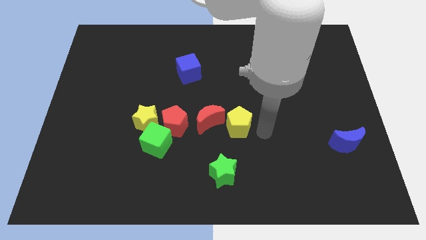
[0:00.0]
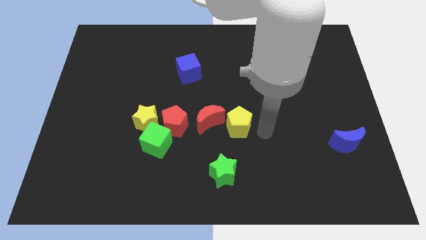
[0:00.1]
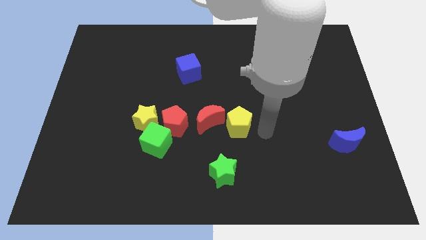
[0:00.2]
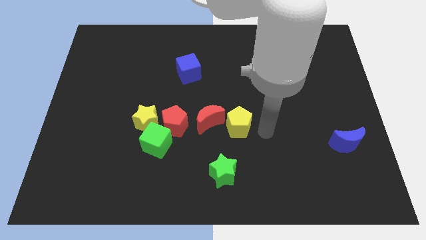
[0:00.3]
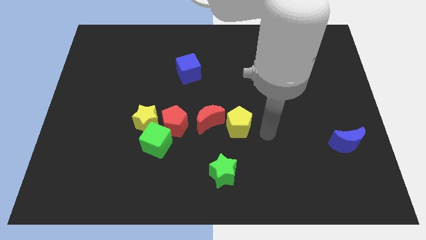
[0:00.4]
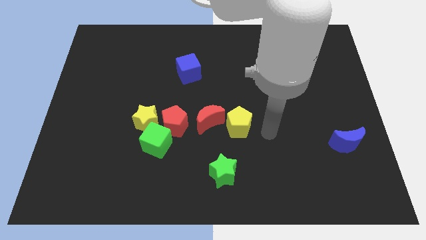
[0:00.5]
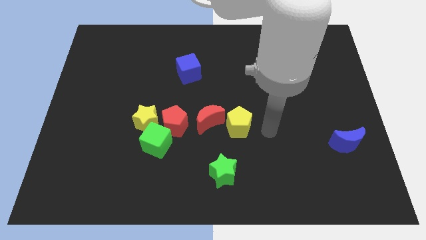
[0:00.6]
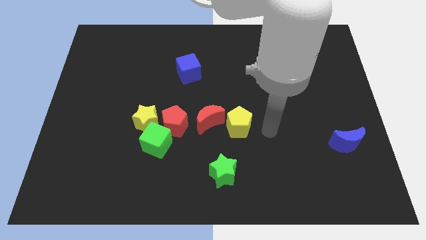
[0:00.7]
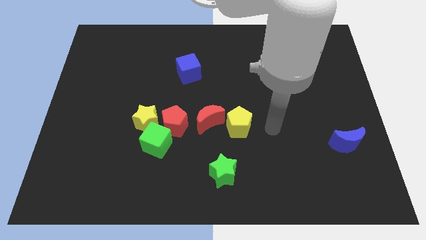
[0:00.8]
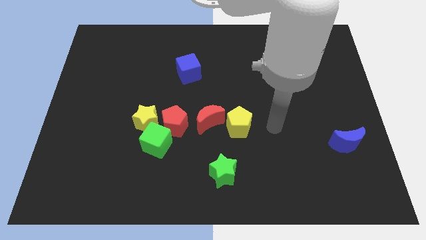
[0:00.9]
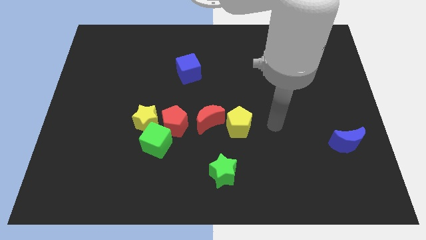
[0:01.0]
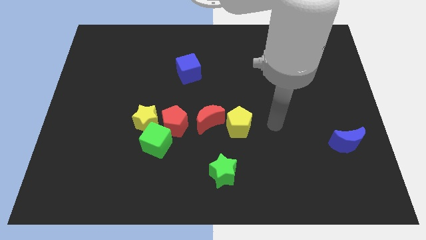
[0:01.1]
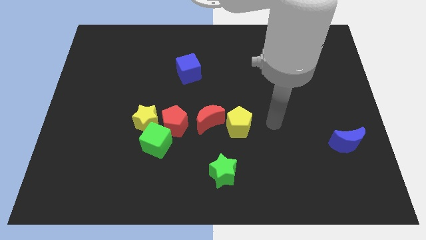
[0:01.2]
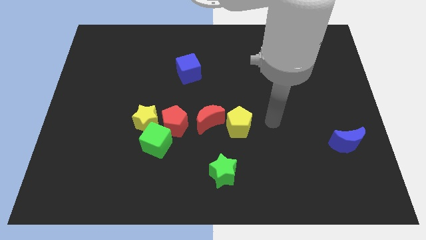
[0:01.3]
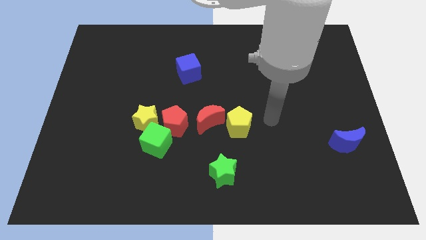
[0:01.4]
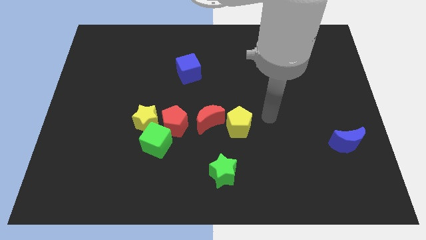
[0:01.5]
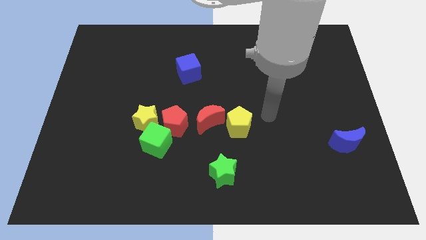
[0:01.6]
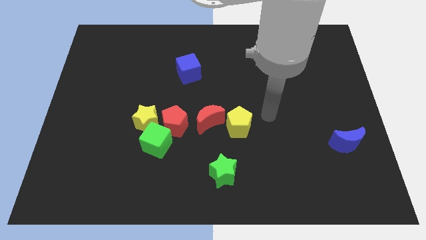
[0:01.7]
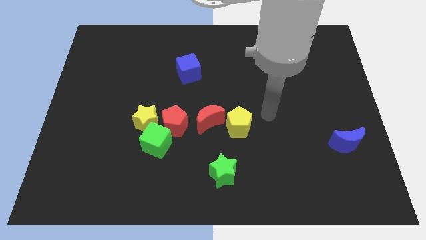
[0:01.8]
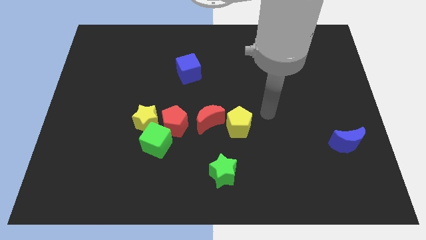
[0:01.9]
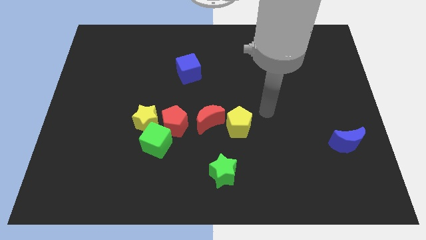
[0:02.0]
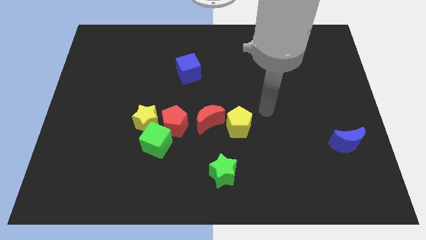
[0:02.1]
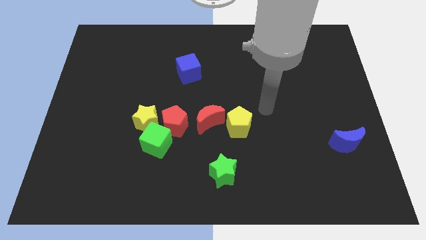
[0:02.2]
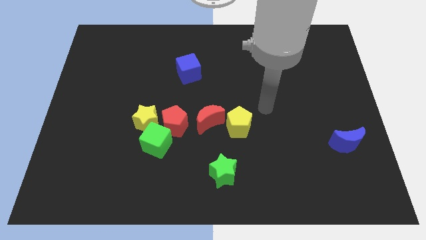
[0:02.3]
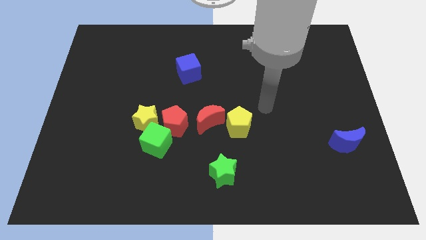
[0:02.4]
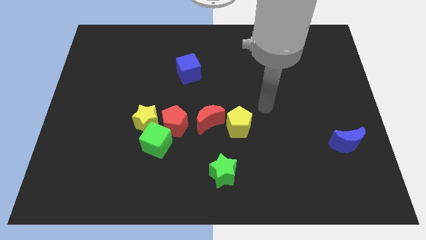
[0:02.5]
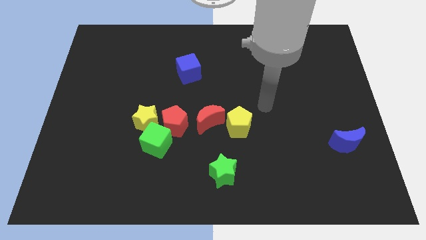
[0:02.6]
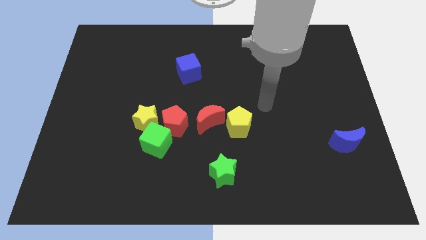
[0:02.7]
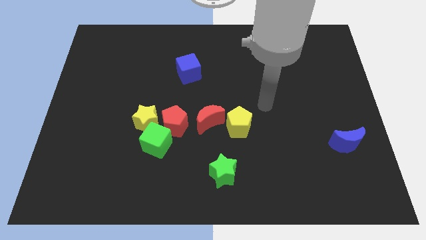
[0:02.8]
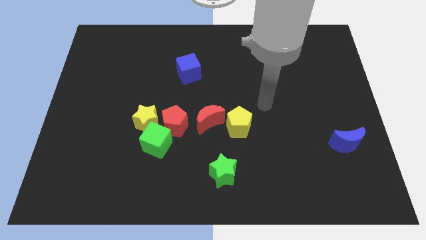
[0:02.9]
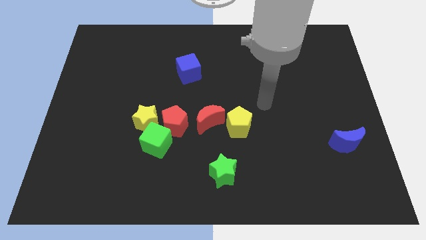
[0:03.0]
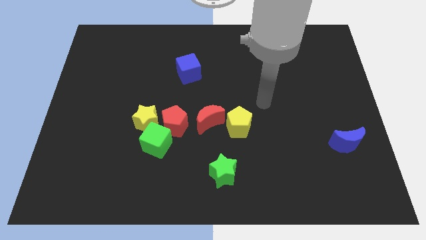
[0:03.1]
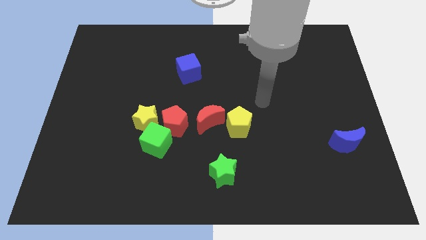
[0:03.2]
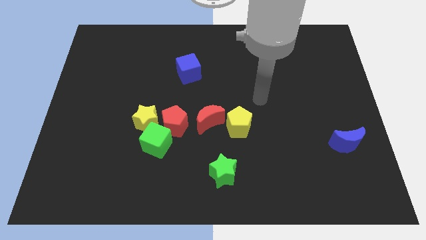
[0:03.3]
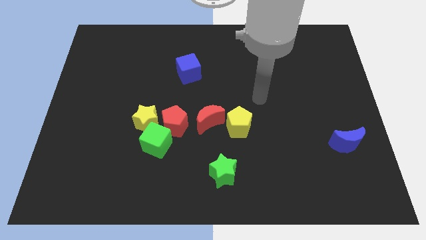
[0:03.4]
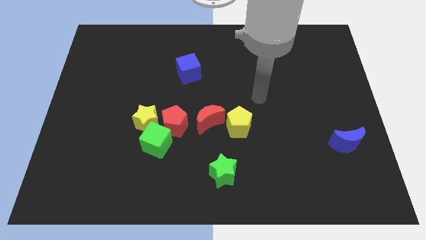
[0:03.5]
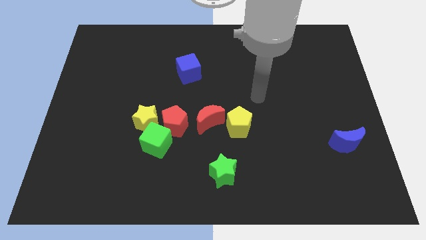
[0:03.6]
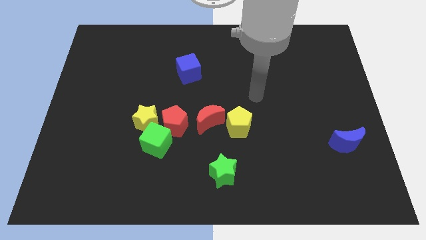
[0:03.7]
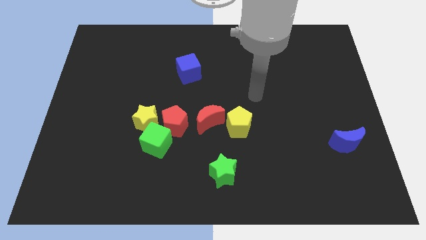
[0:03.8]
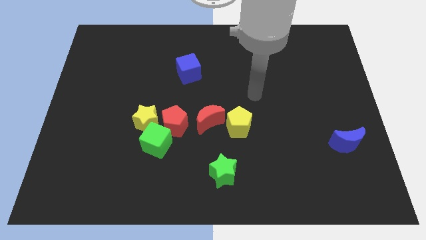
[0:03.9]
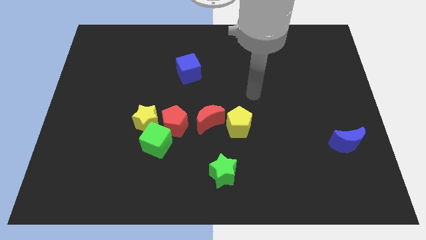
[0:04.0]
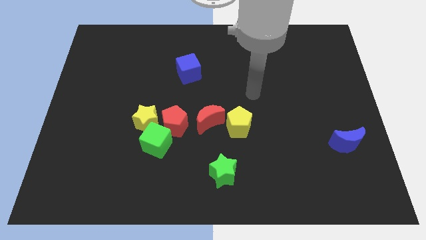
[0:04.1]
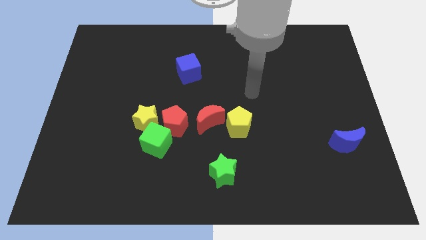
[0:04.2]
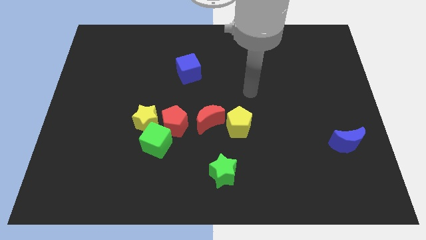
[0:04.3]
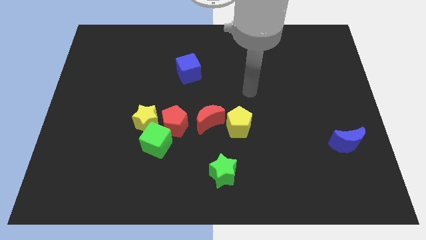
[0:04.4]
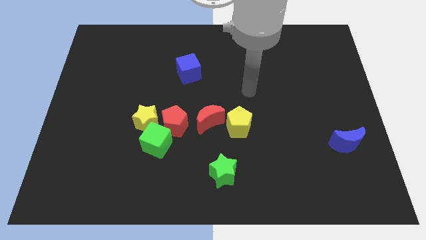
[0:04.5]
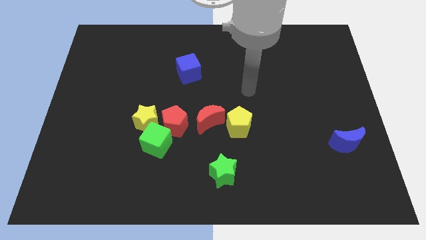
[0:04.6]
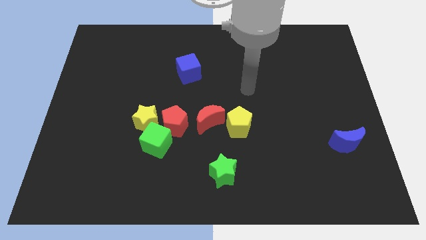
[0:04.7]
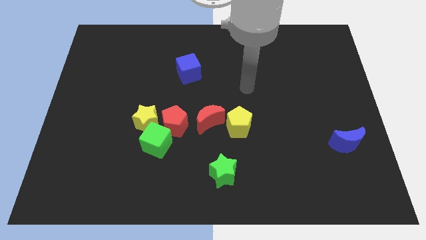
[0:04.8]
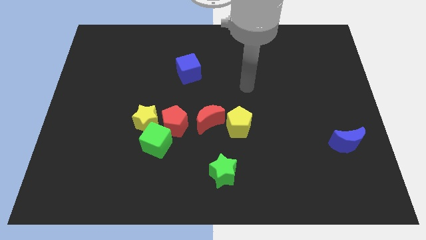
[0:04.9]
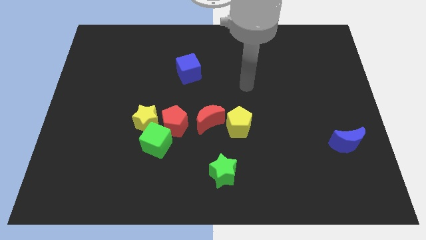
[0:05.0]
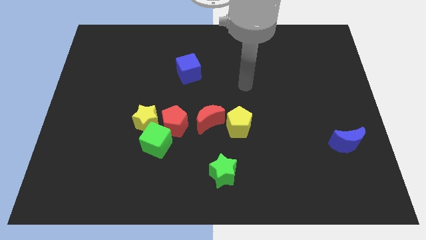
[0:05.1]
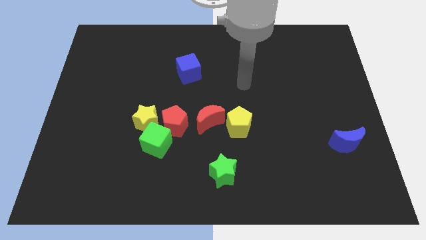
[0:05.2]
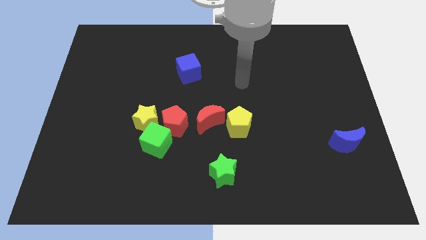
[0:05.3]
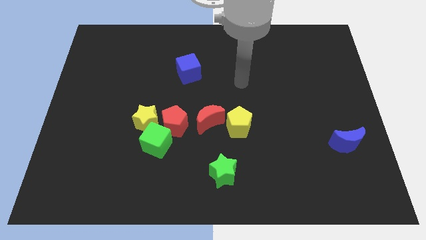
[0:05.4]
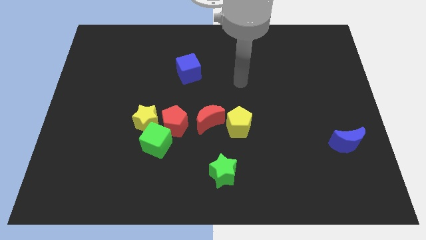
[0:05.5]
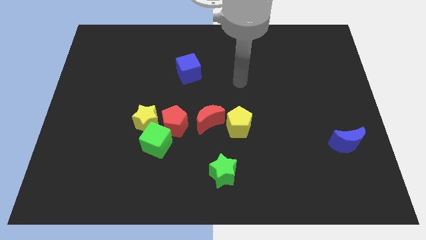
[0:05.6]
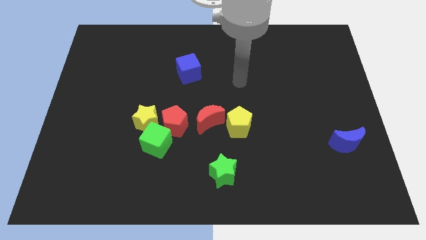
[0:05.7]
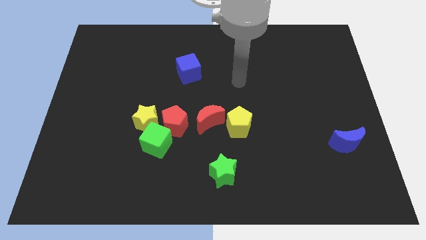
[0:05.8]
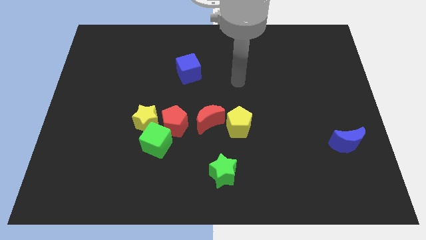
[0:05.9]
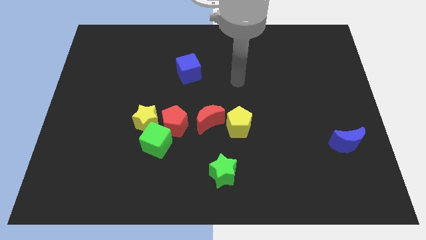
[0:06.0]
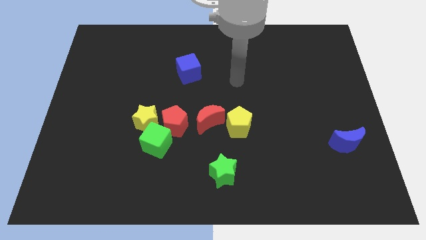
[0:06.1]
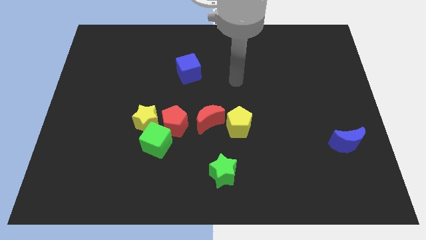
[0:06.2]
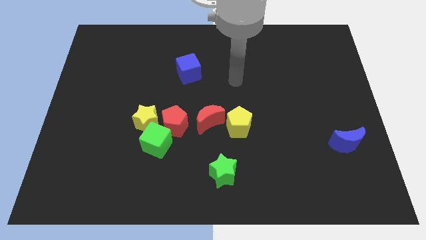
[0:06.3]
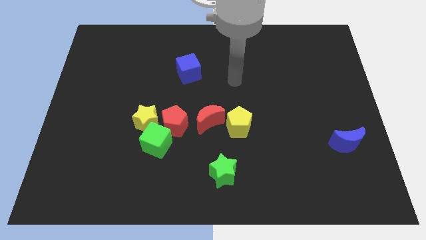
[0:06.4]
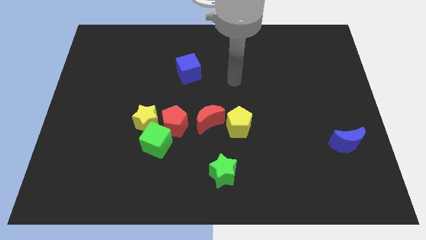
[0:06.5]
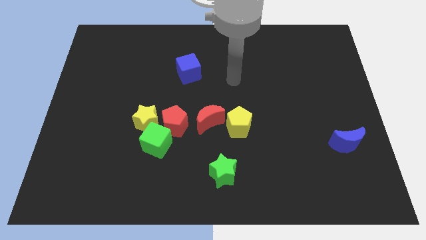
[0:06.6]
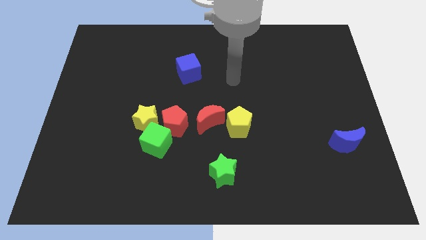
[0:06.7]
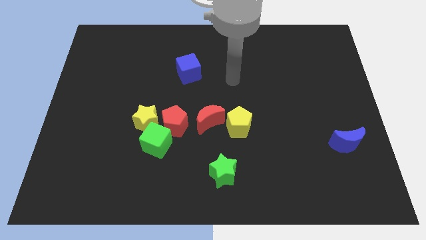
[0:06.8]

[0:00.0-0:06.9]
move the arm away from the yellow pentagon

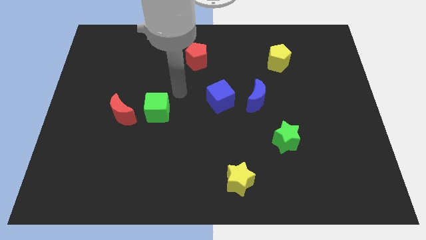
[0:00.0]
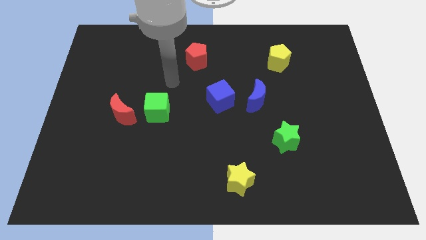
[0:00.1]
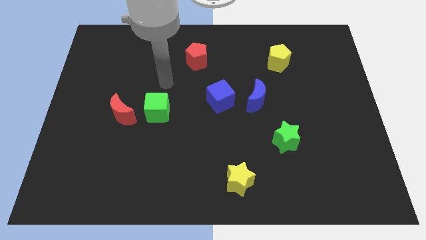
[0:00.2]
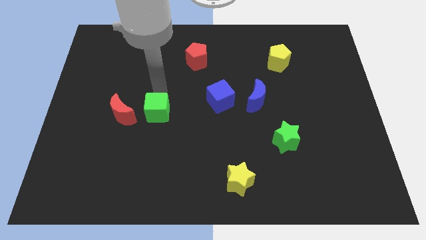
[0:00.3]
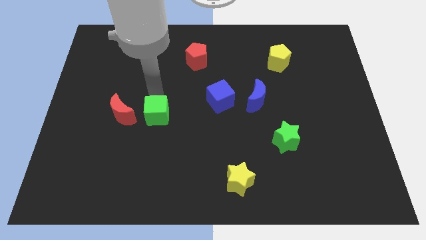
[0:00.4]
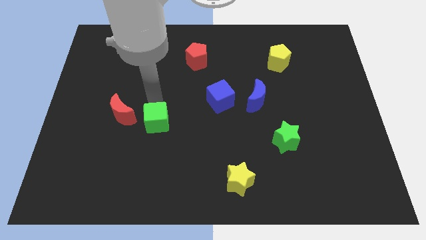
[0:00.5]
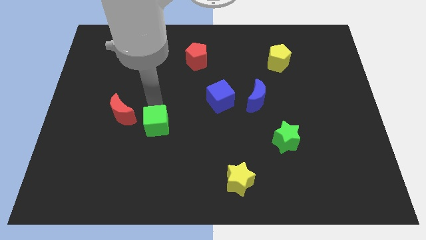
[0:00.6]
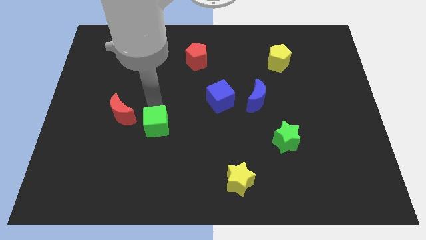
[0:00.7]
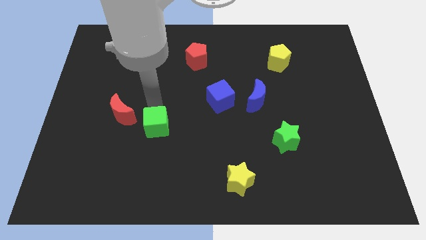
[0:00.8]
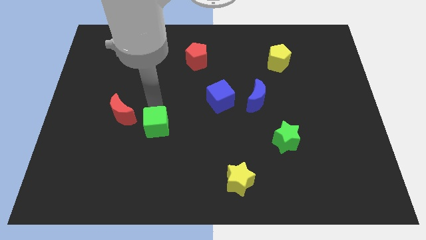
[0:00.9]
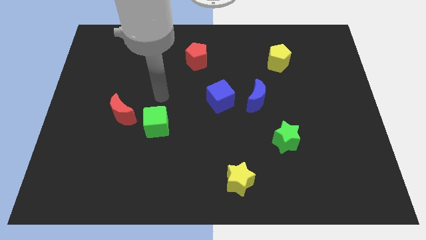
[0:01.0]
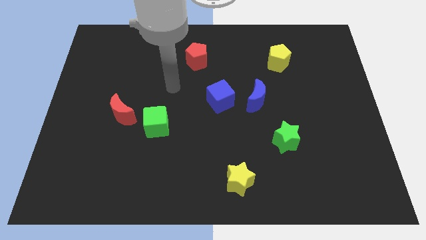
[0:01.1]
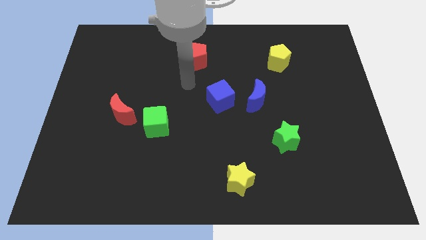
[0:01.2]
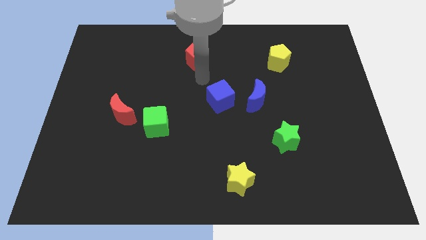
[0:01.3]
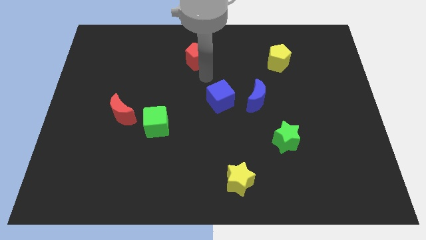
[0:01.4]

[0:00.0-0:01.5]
move the green cube slightly

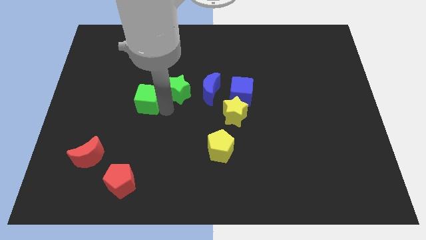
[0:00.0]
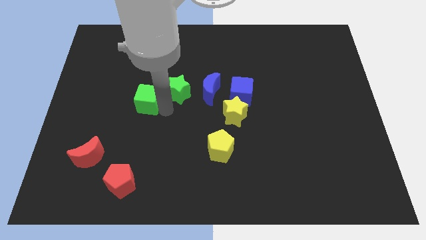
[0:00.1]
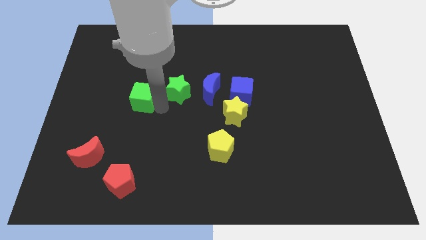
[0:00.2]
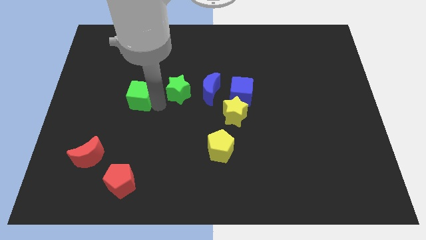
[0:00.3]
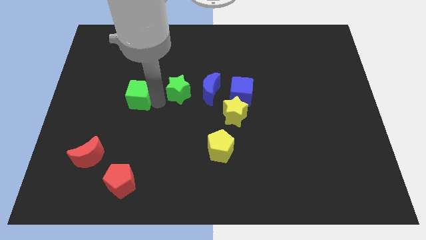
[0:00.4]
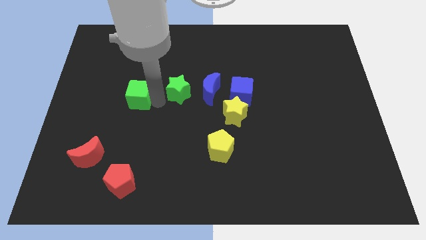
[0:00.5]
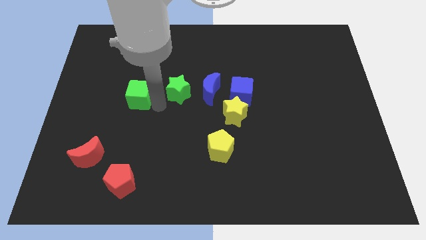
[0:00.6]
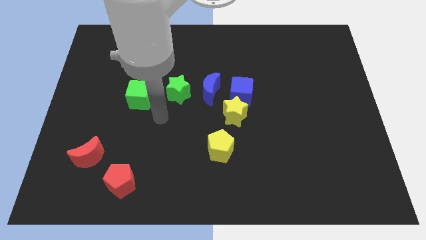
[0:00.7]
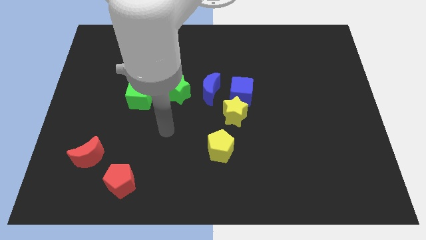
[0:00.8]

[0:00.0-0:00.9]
slightly push the green cube to the left of the green star
